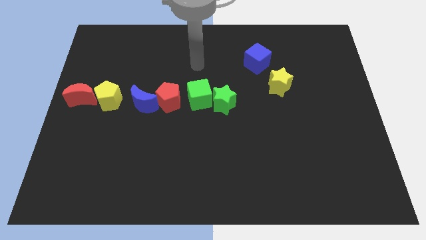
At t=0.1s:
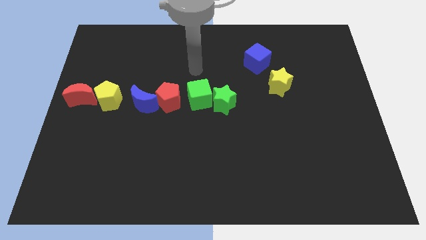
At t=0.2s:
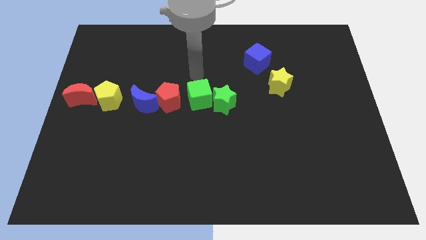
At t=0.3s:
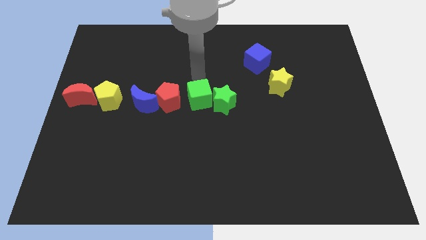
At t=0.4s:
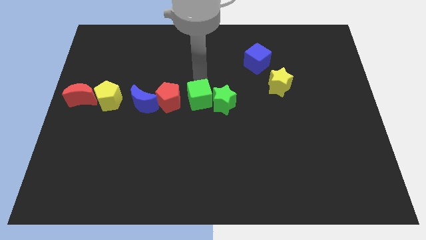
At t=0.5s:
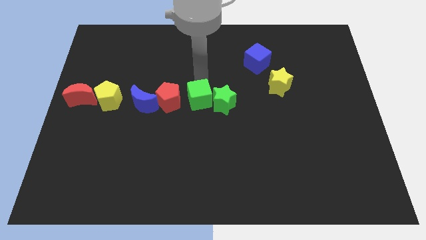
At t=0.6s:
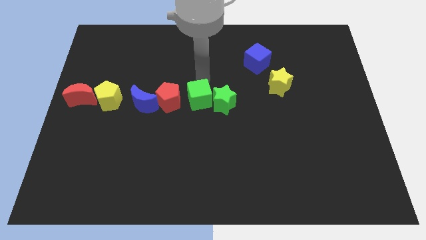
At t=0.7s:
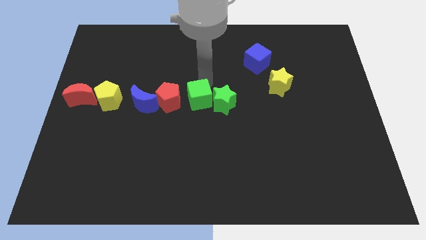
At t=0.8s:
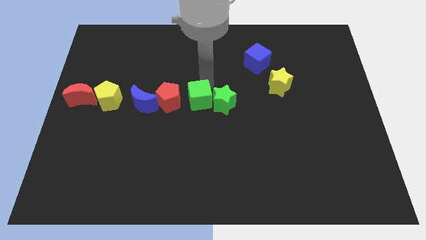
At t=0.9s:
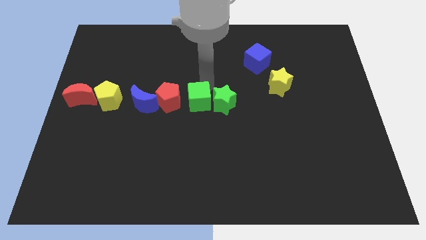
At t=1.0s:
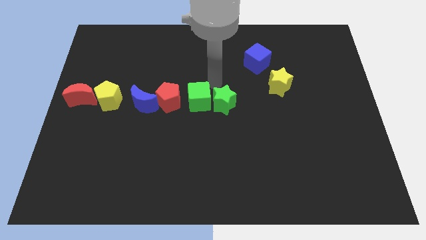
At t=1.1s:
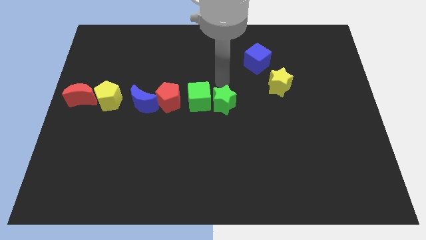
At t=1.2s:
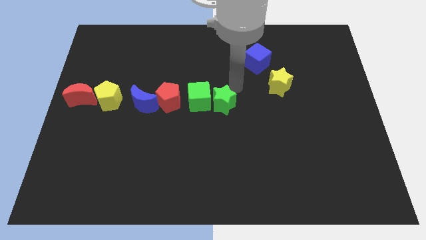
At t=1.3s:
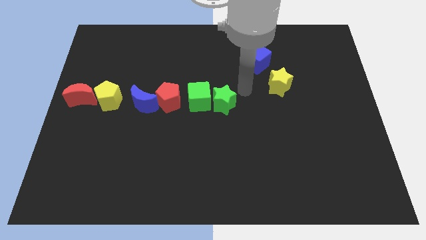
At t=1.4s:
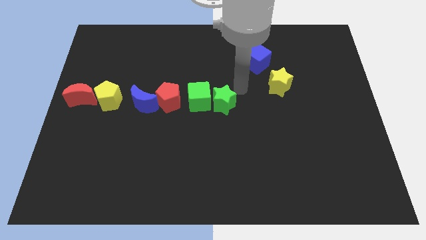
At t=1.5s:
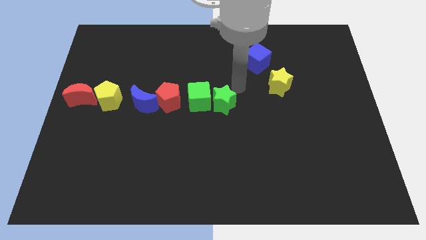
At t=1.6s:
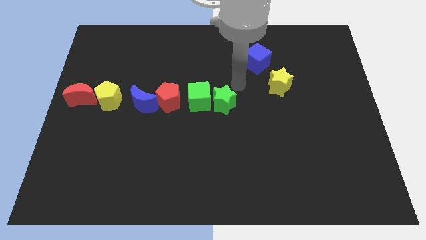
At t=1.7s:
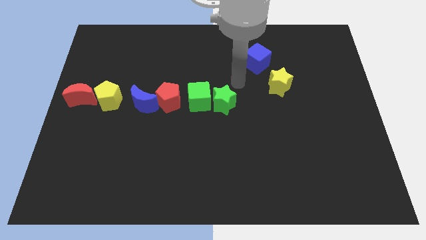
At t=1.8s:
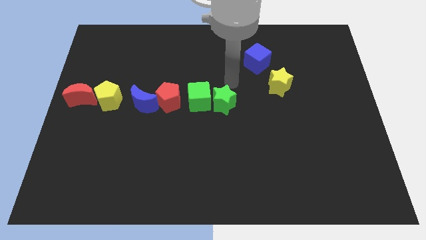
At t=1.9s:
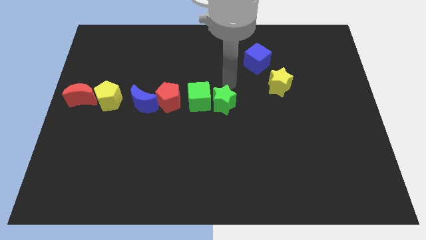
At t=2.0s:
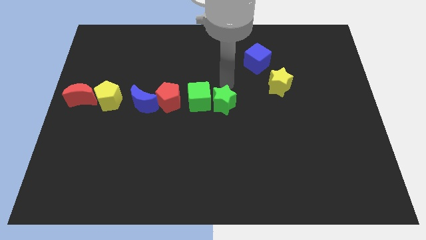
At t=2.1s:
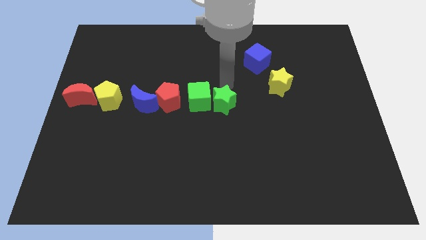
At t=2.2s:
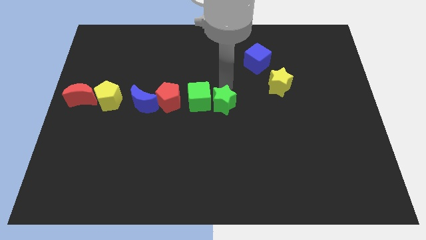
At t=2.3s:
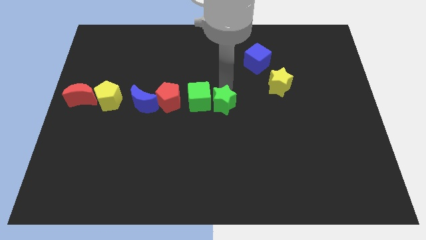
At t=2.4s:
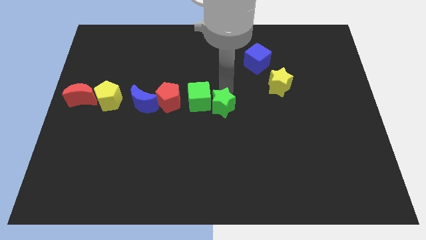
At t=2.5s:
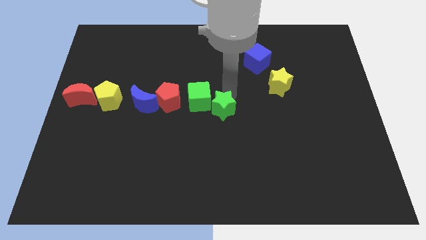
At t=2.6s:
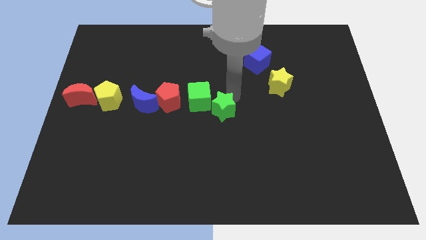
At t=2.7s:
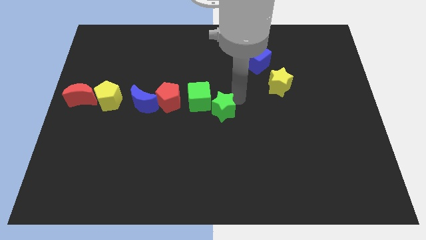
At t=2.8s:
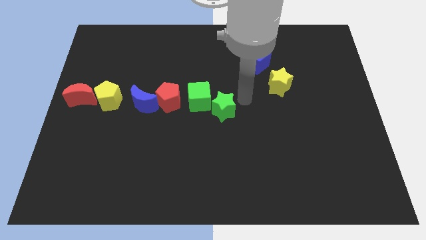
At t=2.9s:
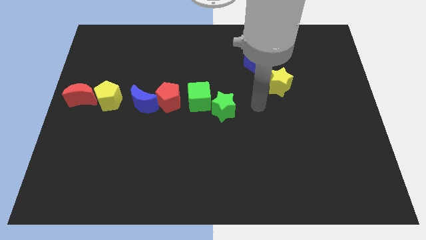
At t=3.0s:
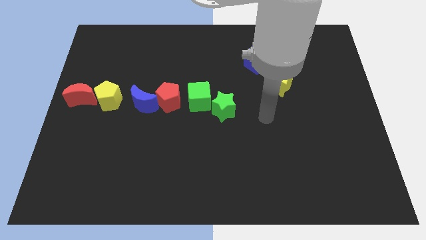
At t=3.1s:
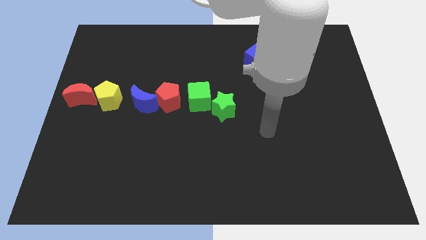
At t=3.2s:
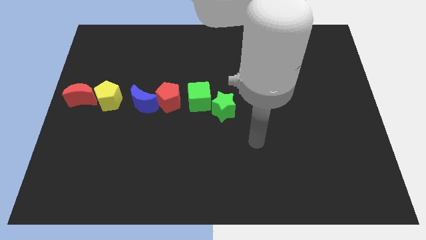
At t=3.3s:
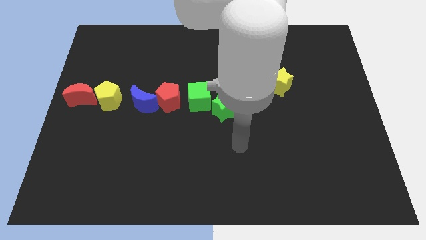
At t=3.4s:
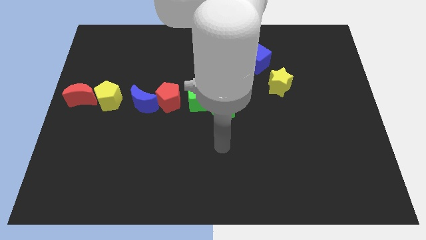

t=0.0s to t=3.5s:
put the green star to the bottom right of the green cube

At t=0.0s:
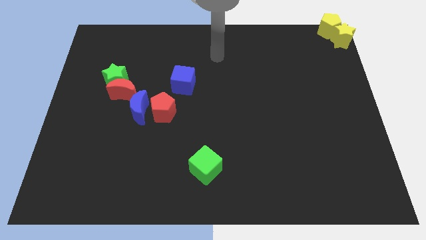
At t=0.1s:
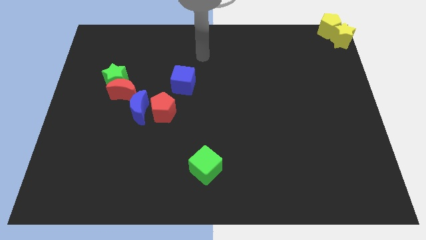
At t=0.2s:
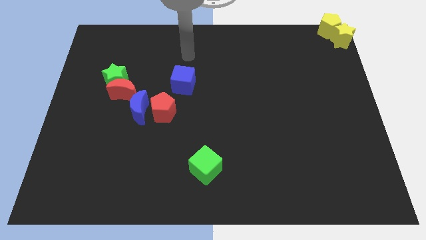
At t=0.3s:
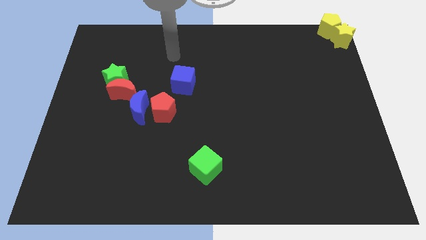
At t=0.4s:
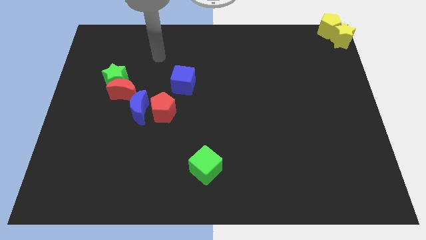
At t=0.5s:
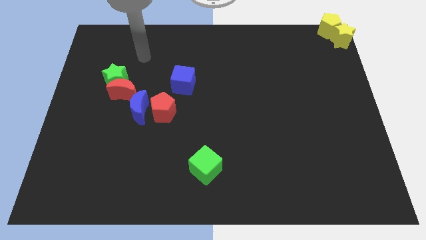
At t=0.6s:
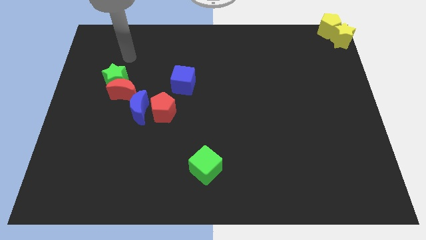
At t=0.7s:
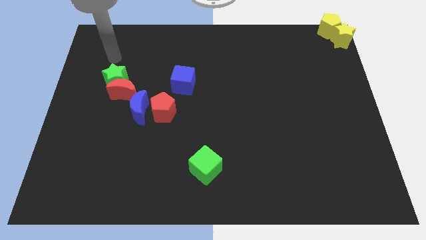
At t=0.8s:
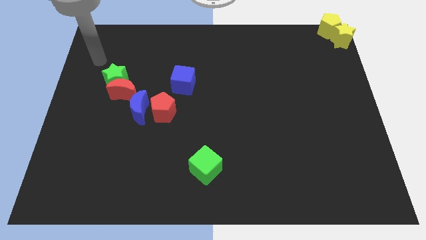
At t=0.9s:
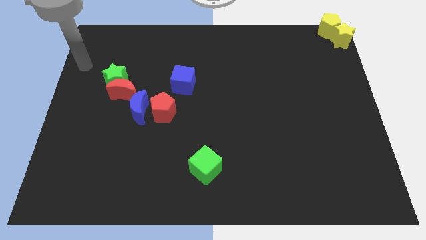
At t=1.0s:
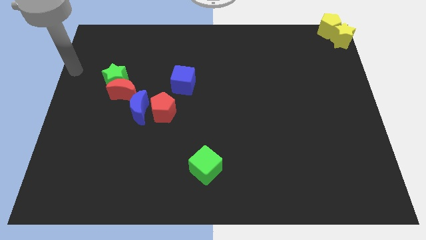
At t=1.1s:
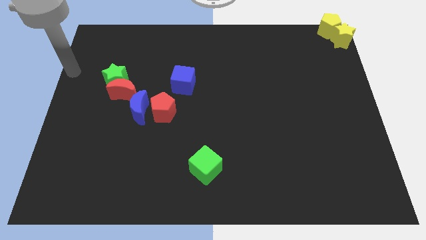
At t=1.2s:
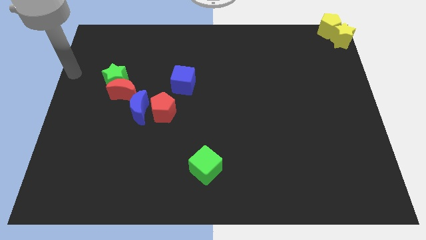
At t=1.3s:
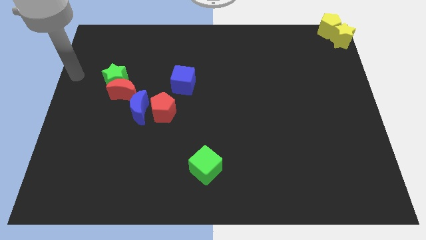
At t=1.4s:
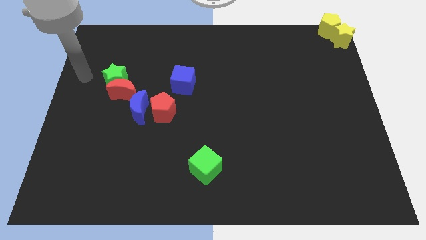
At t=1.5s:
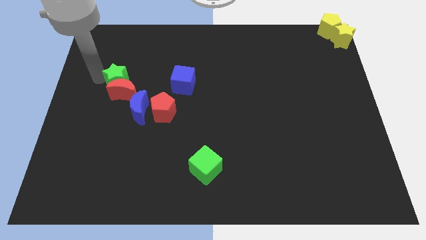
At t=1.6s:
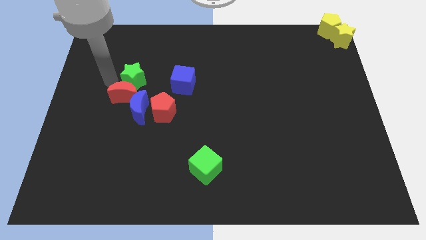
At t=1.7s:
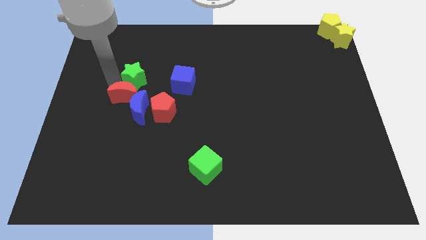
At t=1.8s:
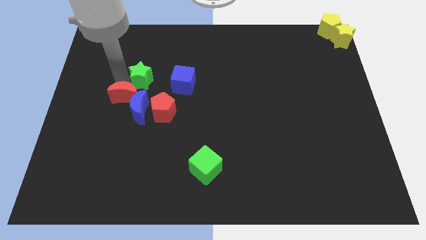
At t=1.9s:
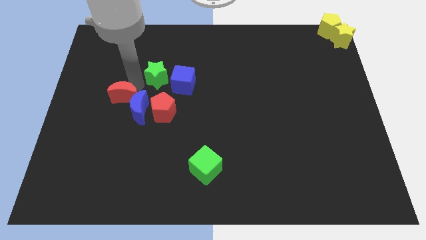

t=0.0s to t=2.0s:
place the green star above the blue crescent

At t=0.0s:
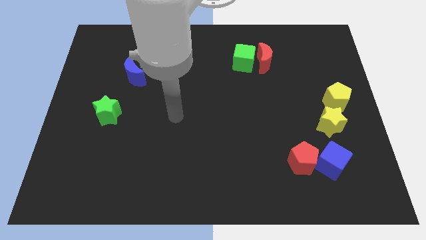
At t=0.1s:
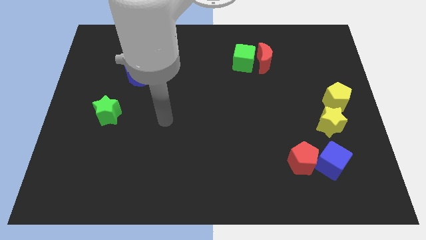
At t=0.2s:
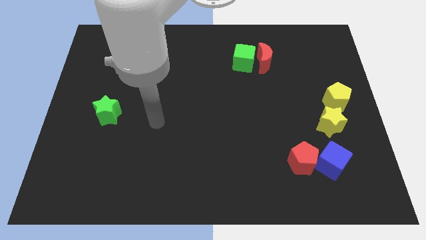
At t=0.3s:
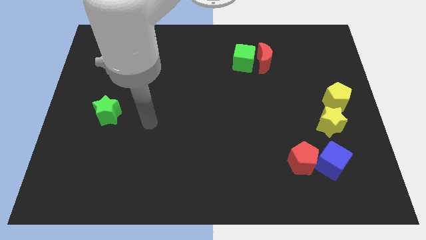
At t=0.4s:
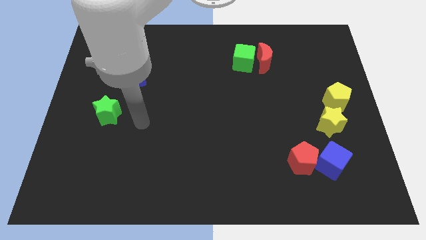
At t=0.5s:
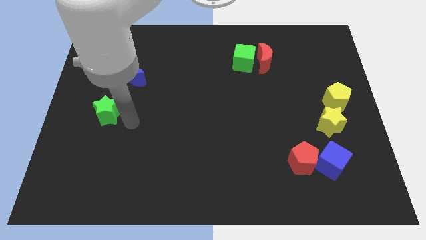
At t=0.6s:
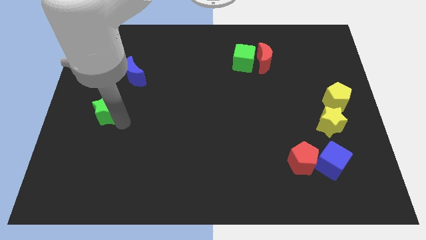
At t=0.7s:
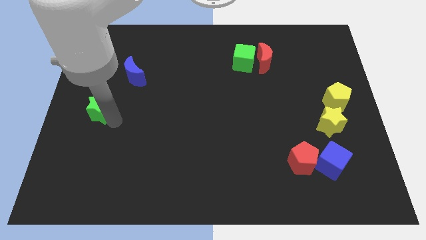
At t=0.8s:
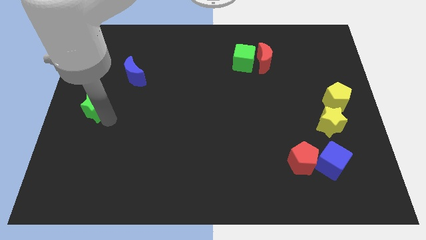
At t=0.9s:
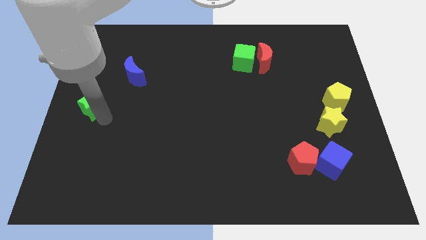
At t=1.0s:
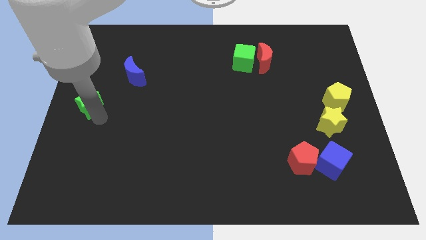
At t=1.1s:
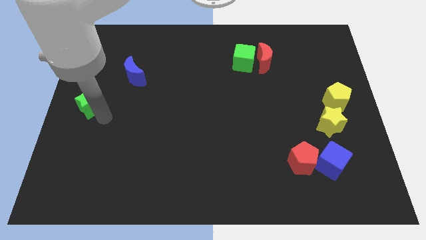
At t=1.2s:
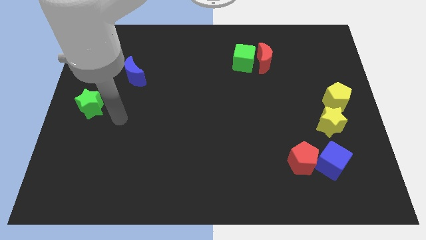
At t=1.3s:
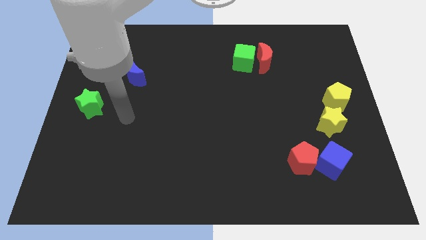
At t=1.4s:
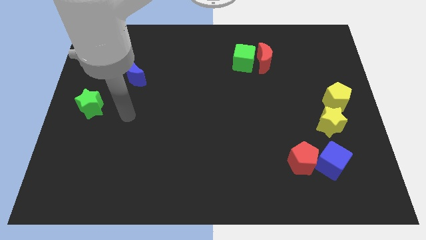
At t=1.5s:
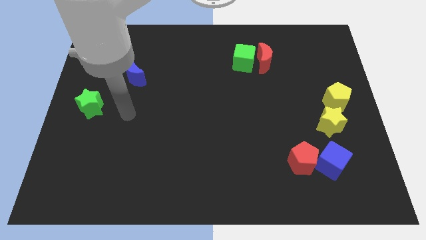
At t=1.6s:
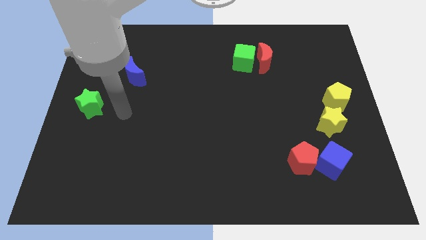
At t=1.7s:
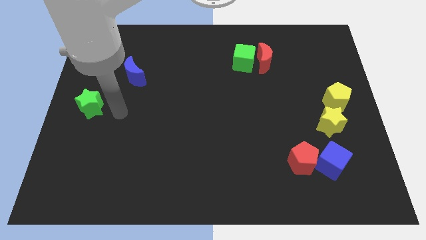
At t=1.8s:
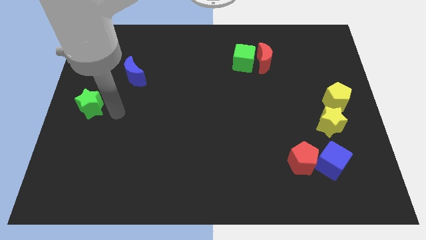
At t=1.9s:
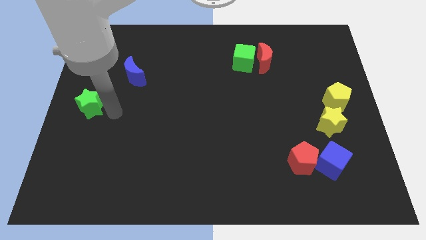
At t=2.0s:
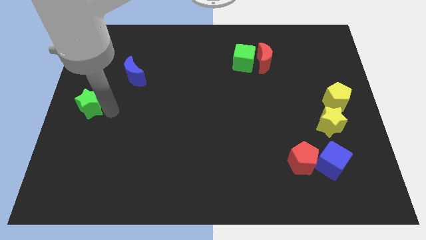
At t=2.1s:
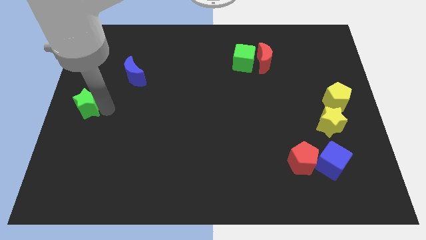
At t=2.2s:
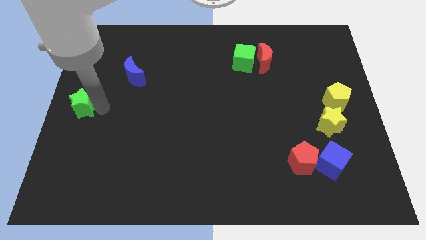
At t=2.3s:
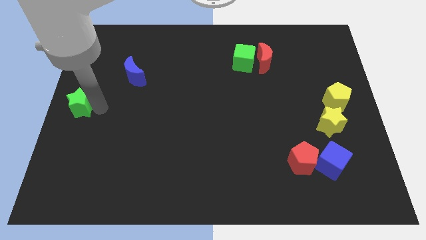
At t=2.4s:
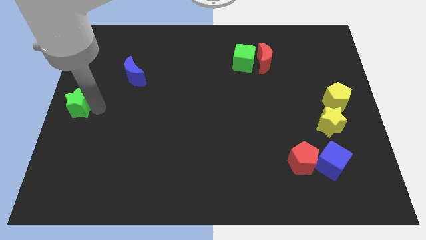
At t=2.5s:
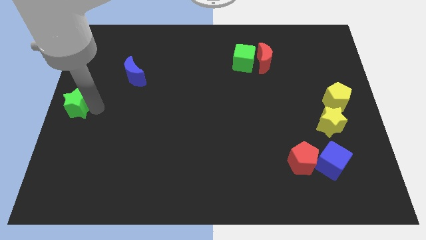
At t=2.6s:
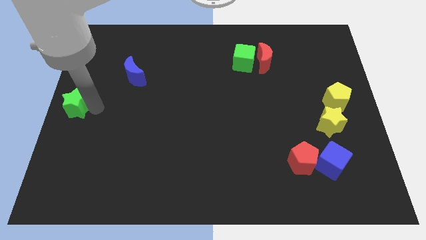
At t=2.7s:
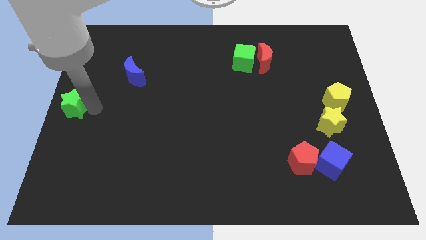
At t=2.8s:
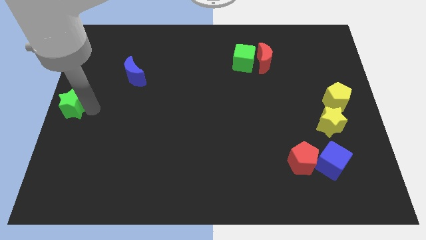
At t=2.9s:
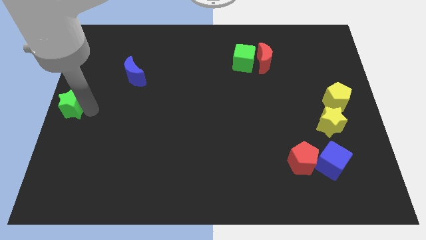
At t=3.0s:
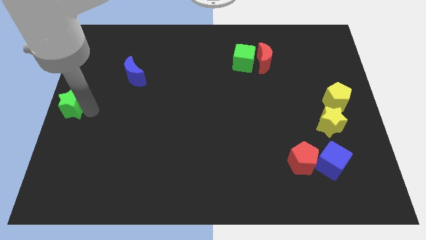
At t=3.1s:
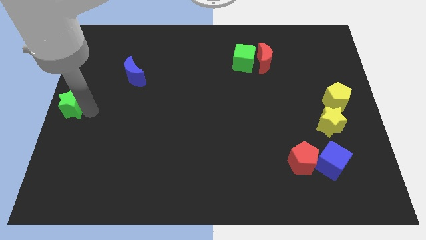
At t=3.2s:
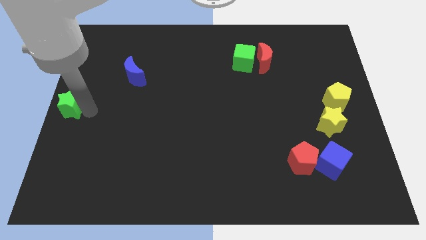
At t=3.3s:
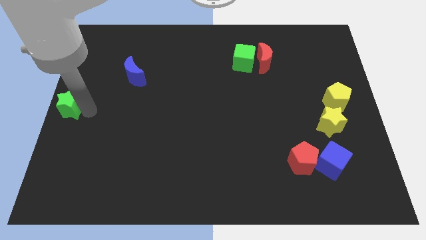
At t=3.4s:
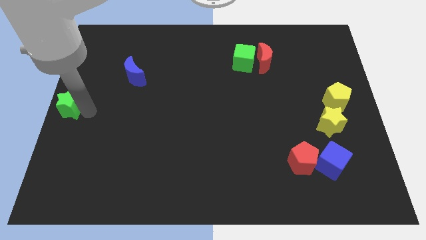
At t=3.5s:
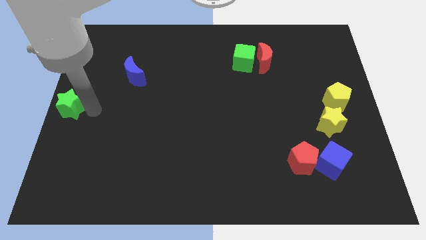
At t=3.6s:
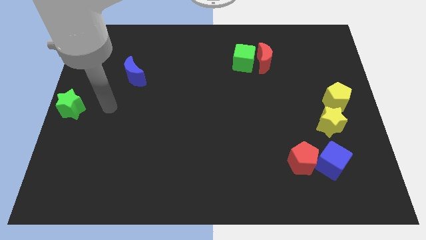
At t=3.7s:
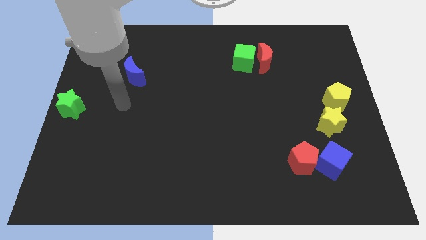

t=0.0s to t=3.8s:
place the green star diagonal to the blue moon
